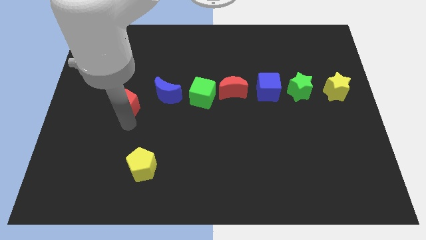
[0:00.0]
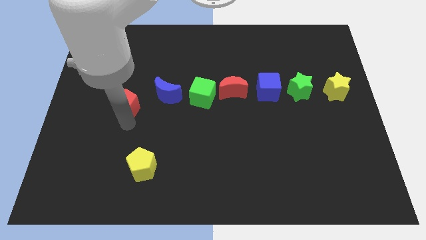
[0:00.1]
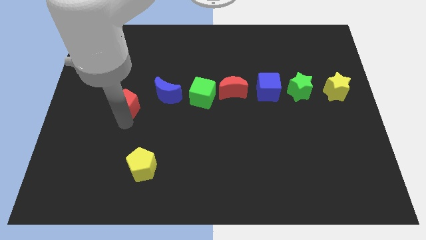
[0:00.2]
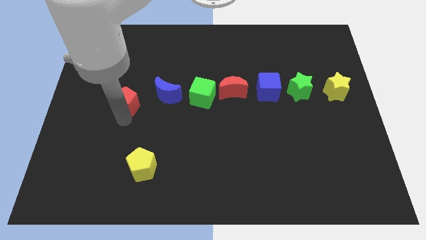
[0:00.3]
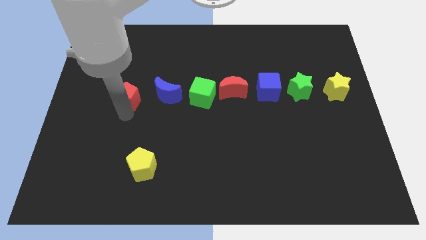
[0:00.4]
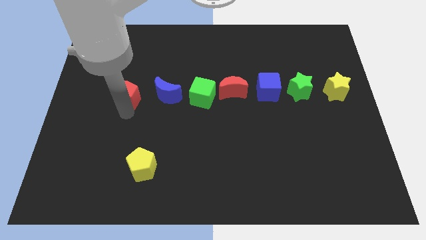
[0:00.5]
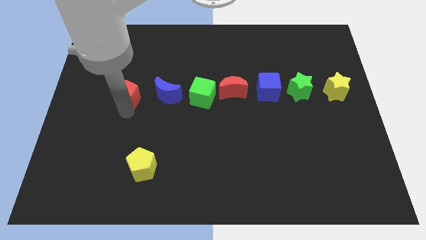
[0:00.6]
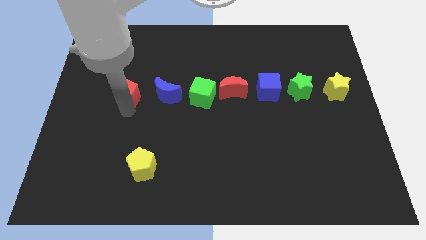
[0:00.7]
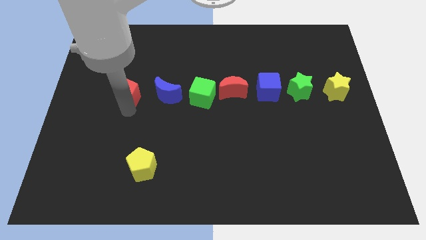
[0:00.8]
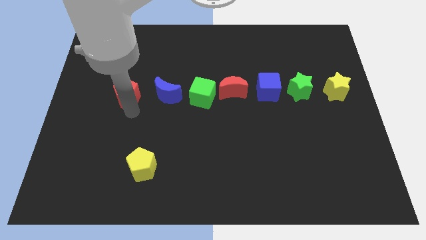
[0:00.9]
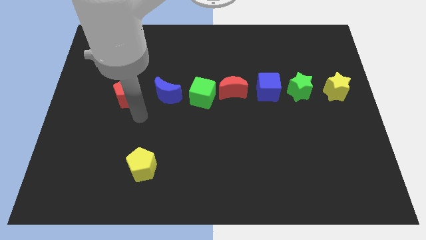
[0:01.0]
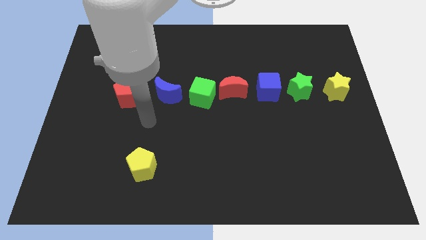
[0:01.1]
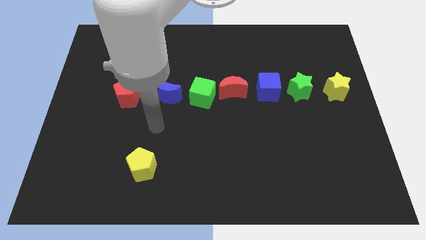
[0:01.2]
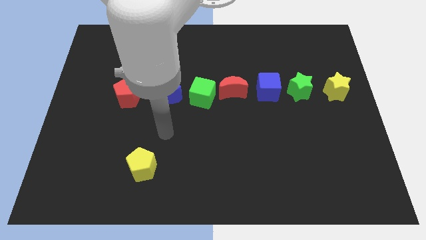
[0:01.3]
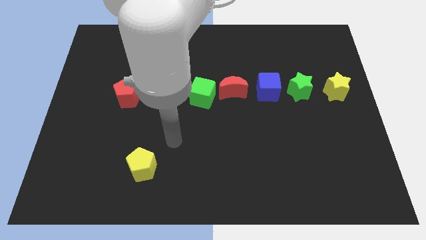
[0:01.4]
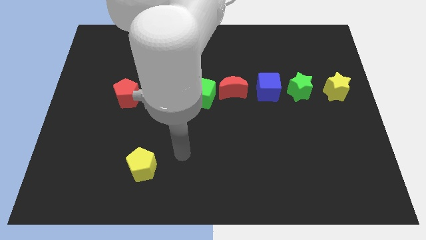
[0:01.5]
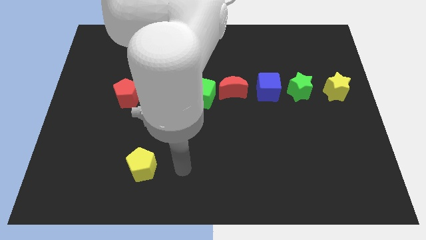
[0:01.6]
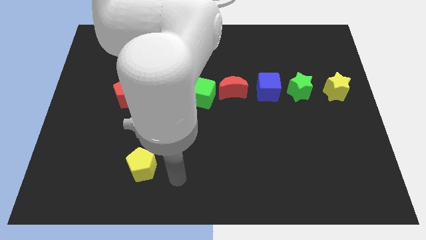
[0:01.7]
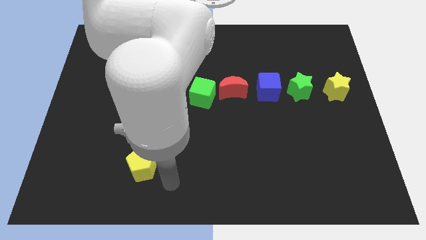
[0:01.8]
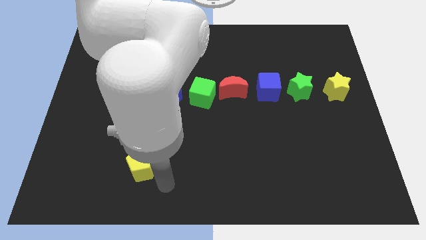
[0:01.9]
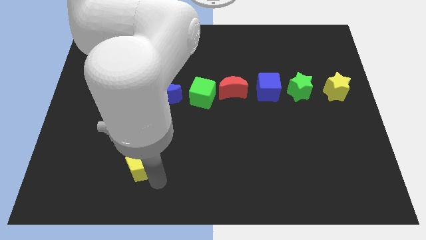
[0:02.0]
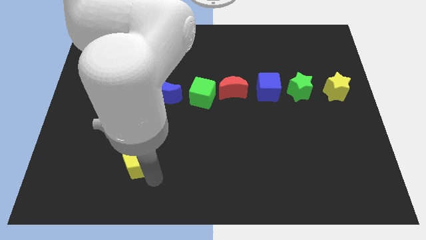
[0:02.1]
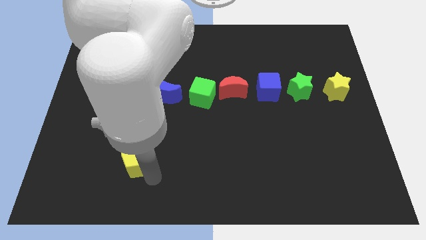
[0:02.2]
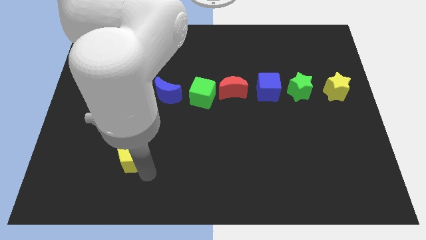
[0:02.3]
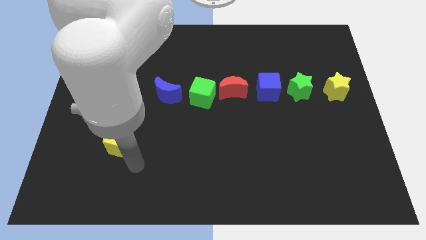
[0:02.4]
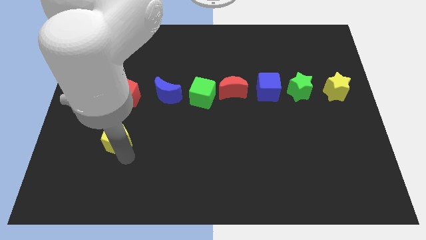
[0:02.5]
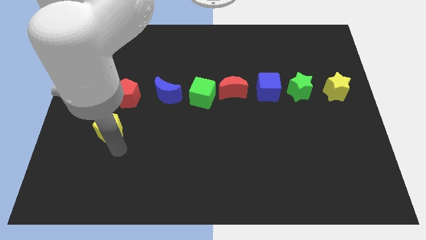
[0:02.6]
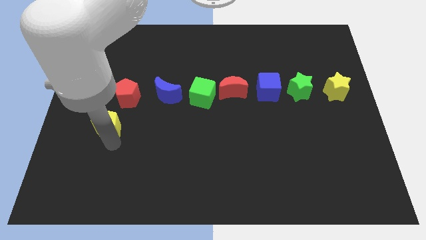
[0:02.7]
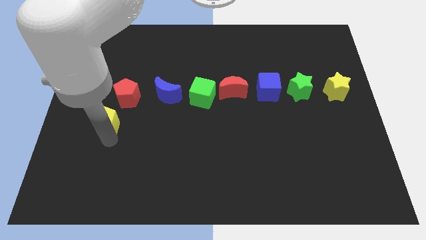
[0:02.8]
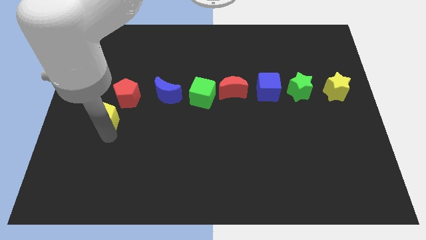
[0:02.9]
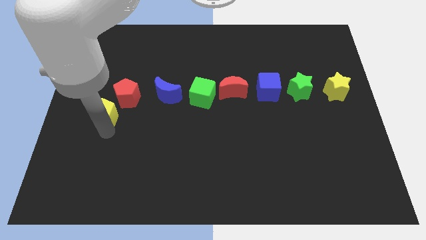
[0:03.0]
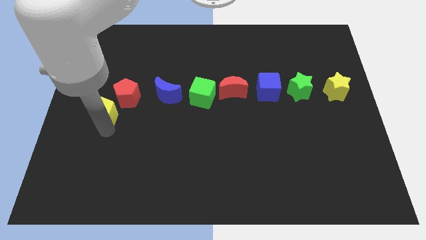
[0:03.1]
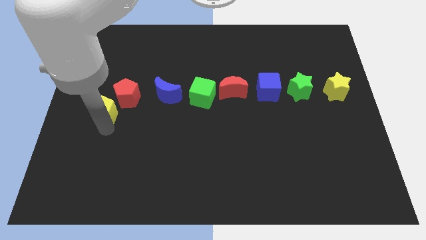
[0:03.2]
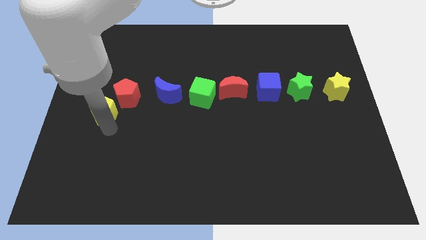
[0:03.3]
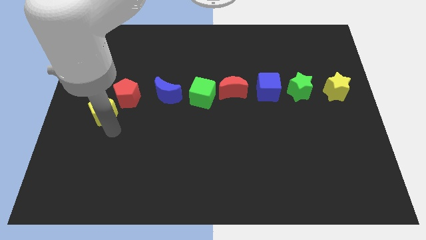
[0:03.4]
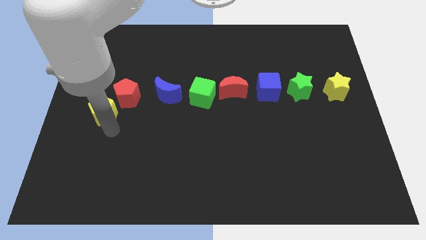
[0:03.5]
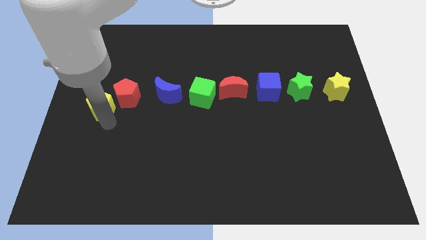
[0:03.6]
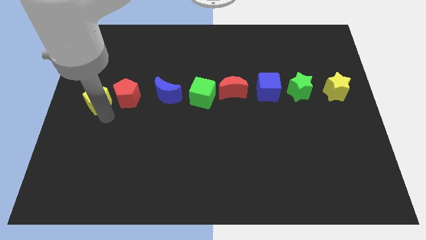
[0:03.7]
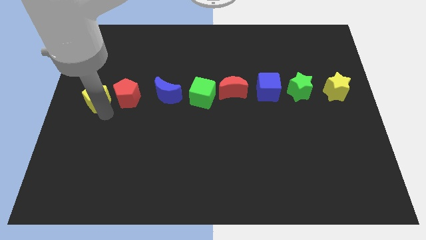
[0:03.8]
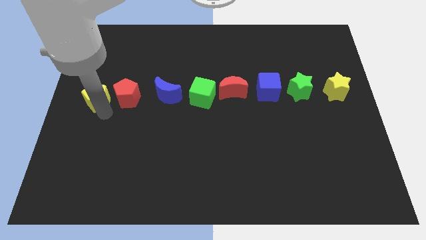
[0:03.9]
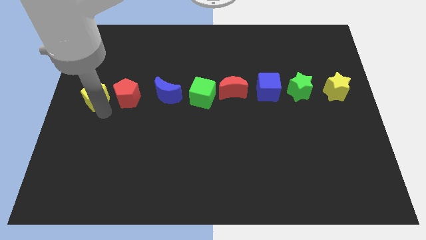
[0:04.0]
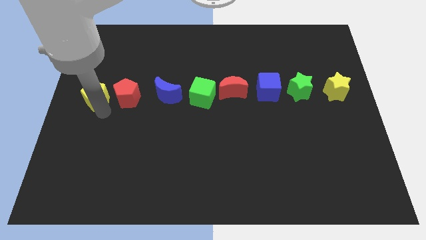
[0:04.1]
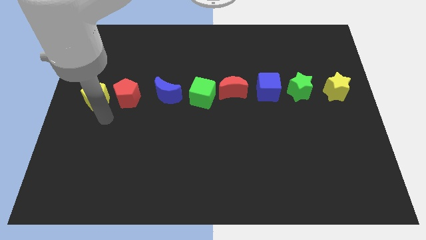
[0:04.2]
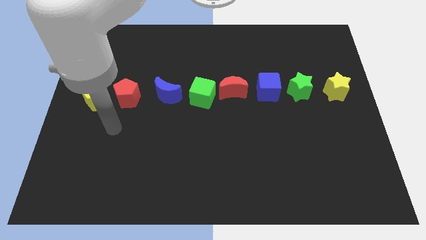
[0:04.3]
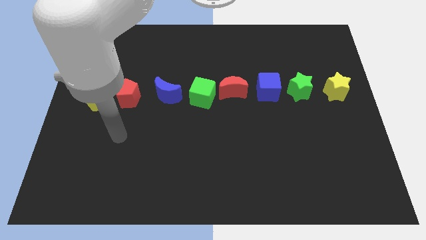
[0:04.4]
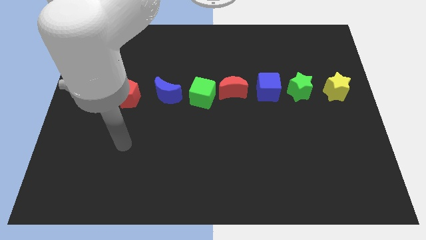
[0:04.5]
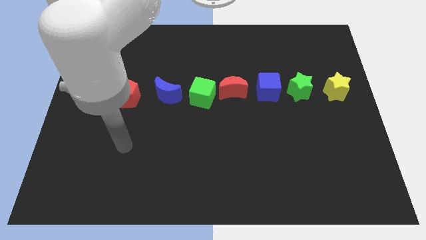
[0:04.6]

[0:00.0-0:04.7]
place the yellow pentagon to the left side of the red pentagon

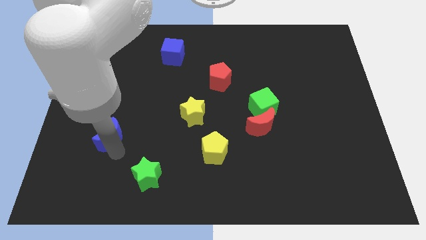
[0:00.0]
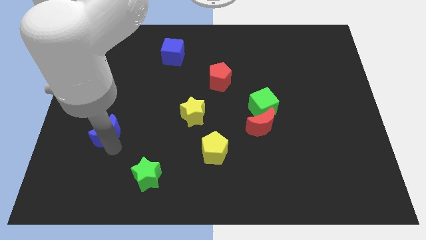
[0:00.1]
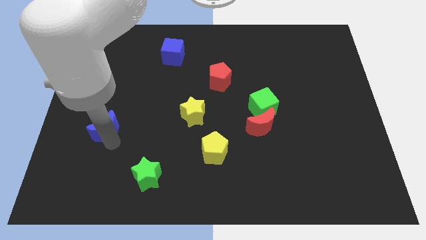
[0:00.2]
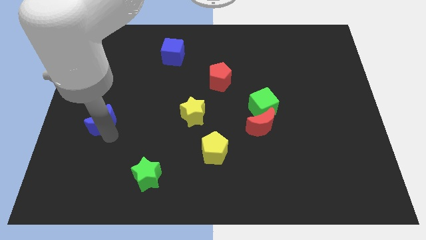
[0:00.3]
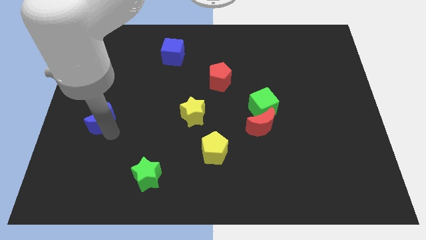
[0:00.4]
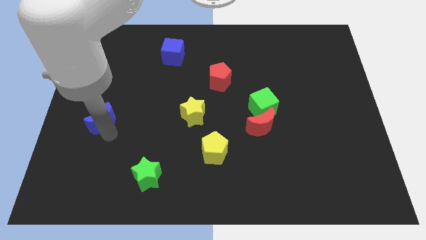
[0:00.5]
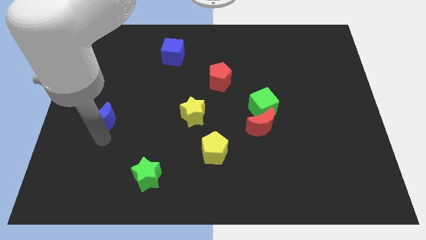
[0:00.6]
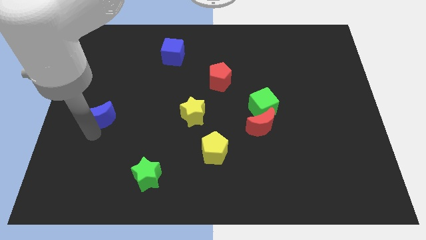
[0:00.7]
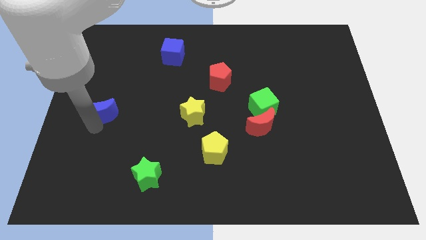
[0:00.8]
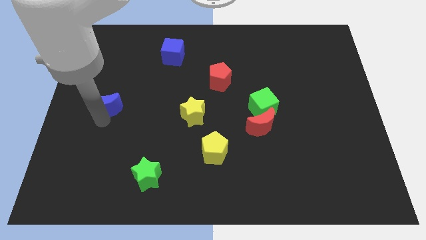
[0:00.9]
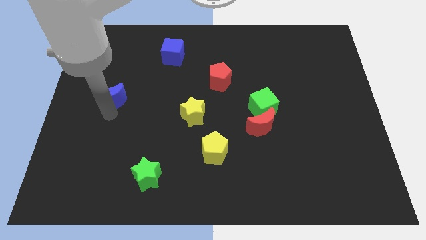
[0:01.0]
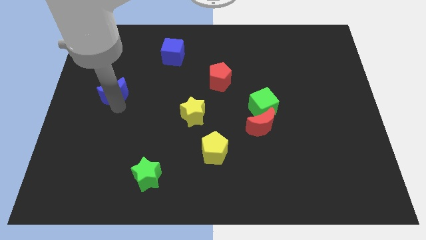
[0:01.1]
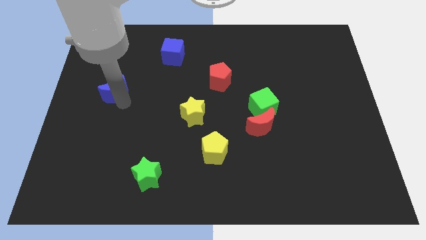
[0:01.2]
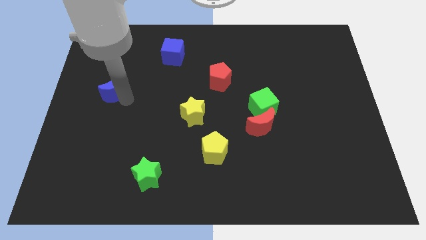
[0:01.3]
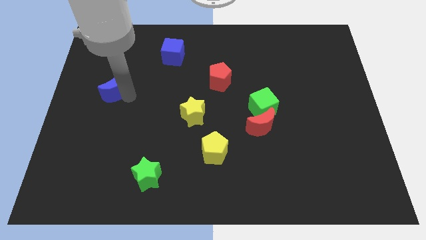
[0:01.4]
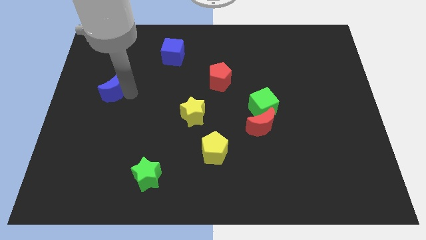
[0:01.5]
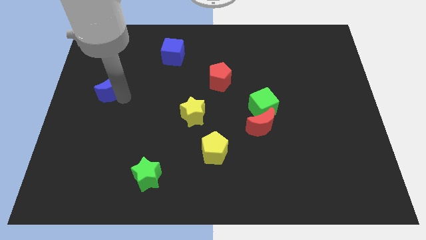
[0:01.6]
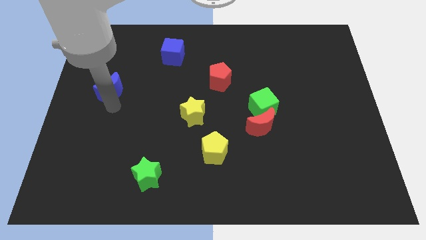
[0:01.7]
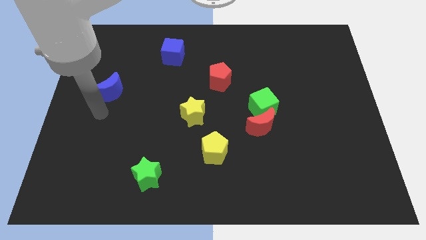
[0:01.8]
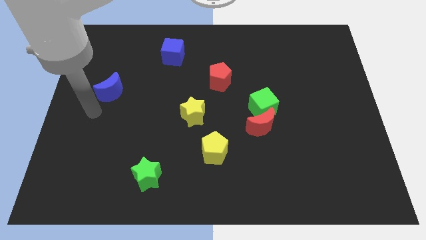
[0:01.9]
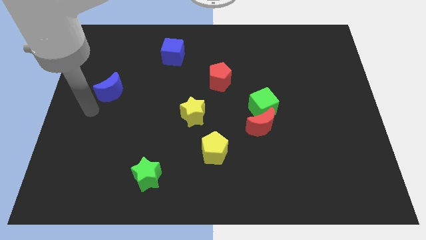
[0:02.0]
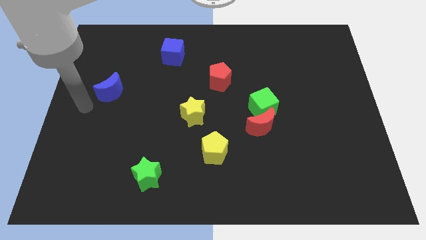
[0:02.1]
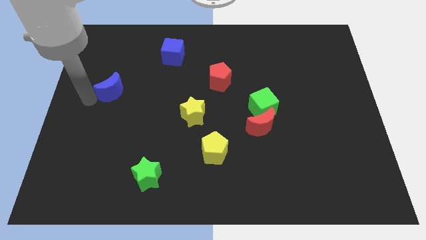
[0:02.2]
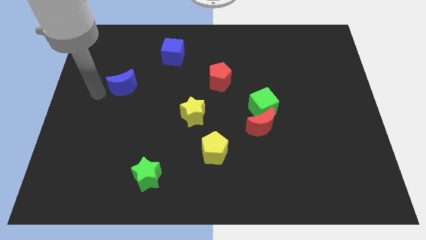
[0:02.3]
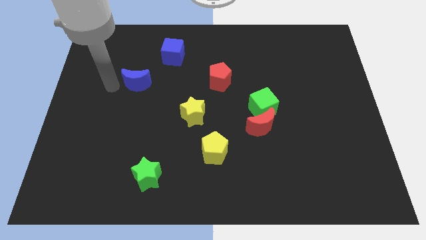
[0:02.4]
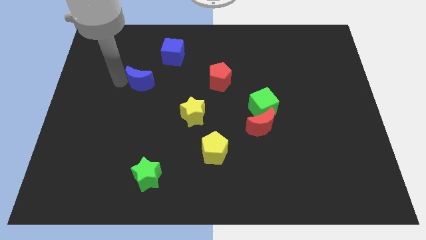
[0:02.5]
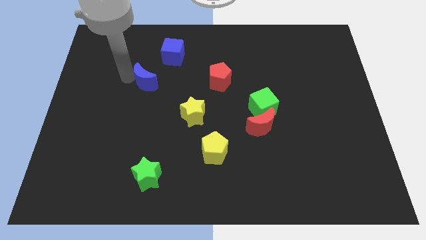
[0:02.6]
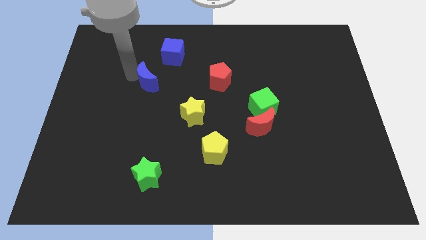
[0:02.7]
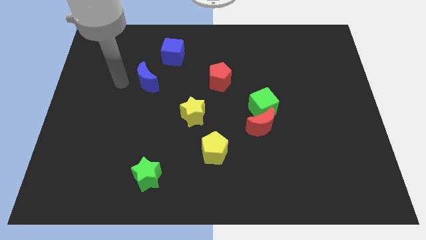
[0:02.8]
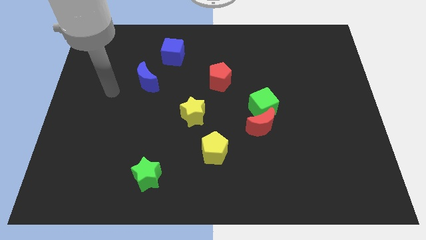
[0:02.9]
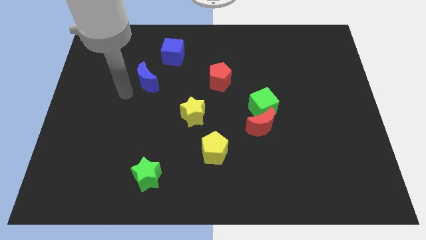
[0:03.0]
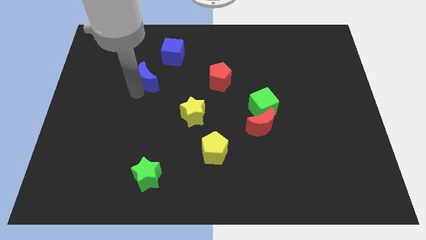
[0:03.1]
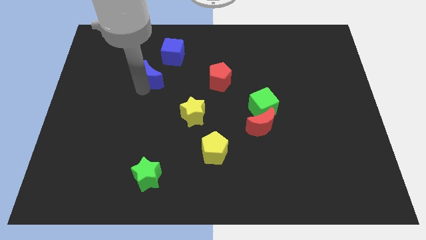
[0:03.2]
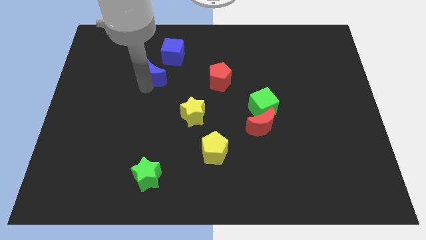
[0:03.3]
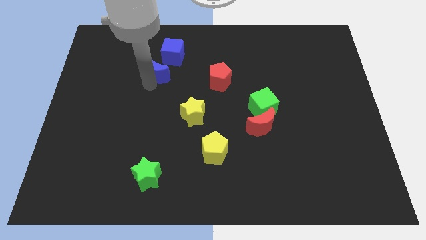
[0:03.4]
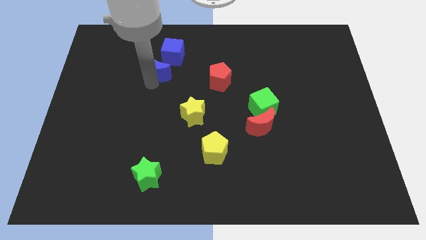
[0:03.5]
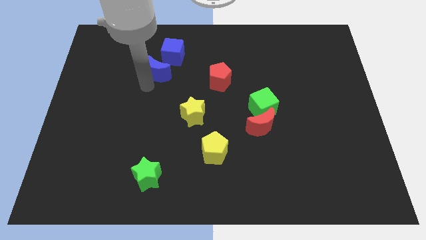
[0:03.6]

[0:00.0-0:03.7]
move the blue crescent below the blue cube

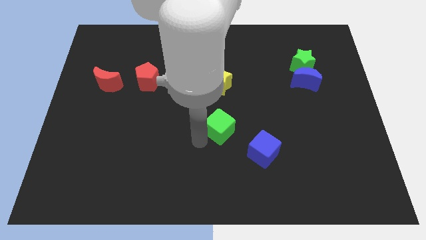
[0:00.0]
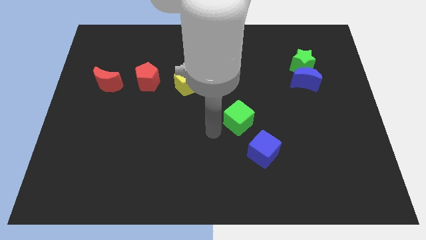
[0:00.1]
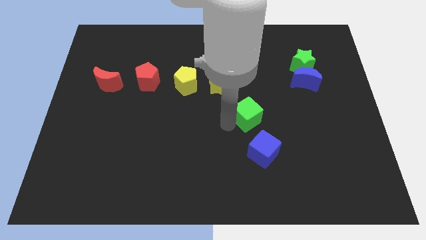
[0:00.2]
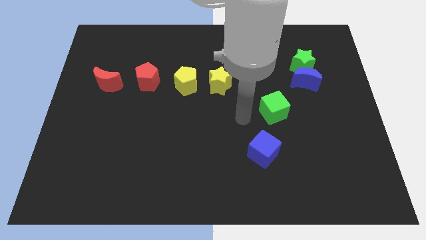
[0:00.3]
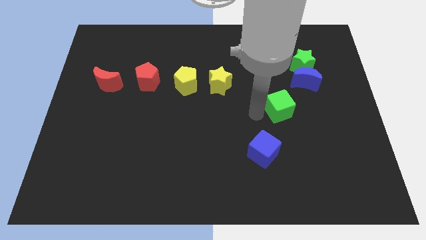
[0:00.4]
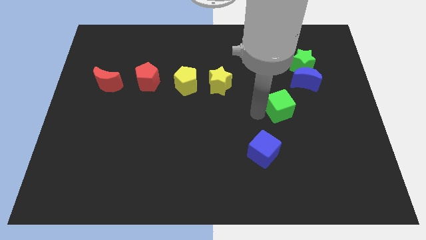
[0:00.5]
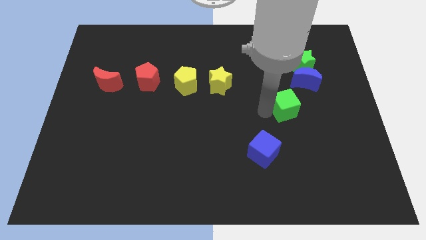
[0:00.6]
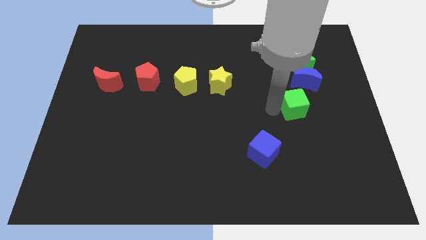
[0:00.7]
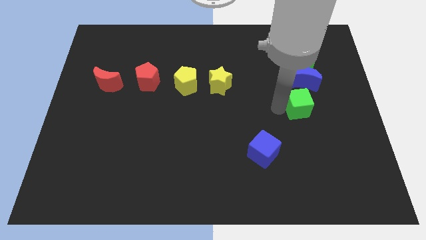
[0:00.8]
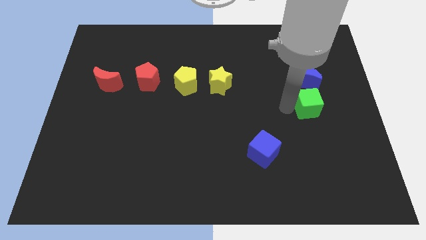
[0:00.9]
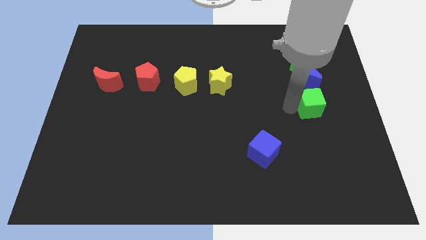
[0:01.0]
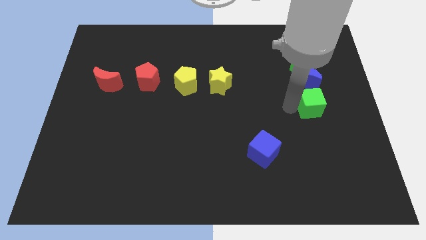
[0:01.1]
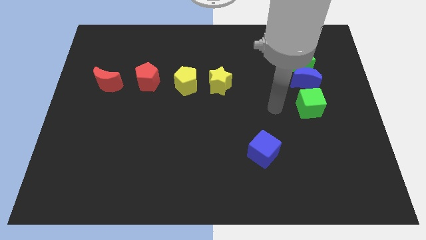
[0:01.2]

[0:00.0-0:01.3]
slightly move the green cube to the bottom of blue crescent
